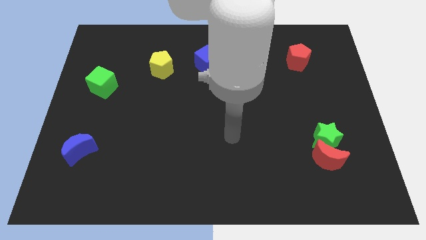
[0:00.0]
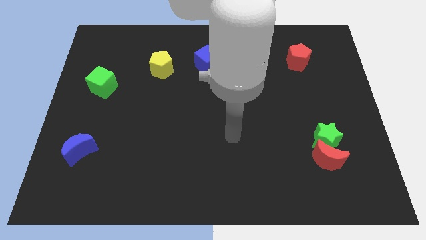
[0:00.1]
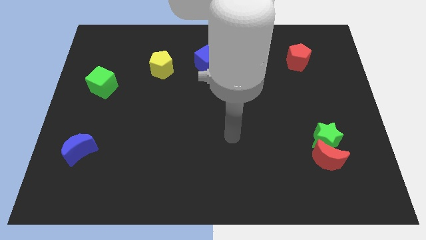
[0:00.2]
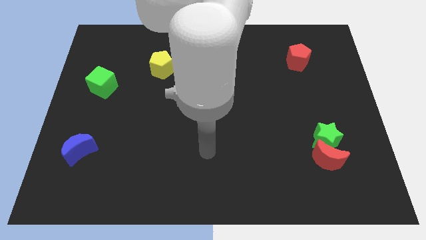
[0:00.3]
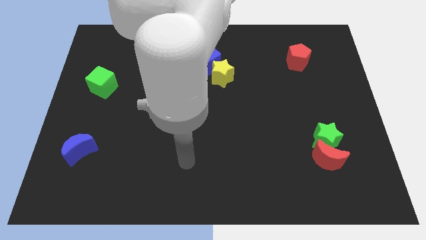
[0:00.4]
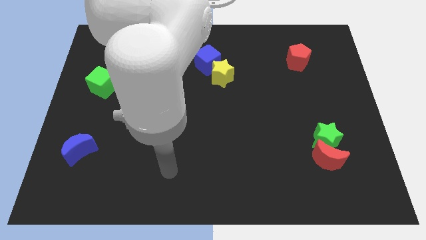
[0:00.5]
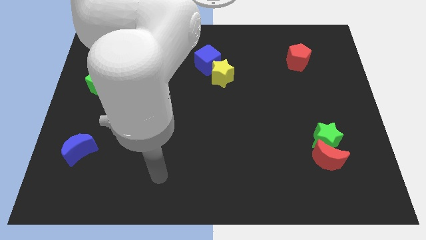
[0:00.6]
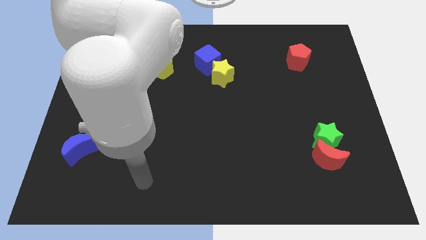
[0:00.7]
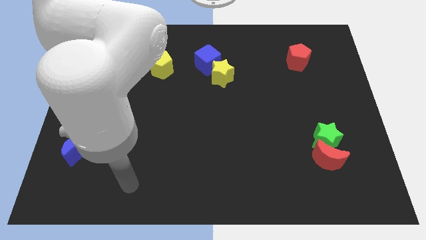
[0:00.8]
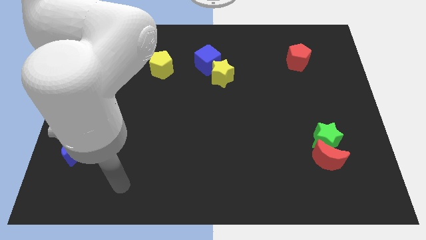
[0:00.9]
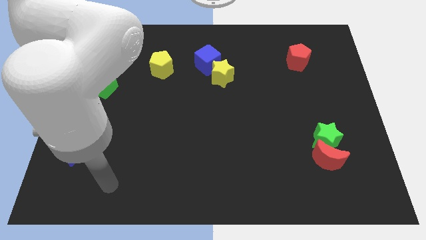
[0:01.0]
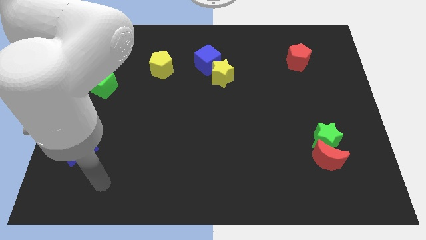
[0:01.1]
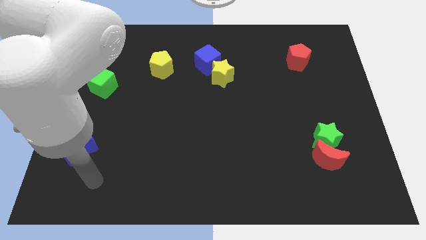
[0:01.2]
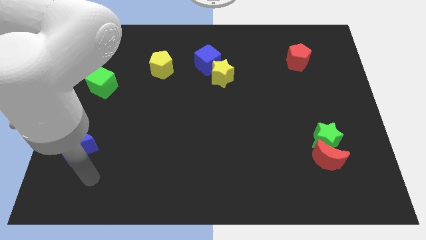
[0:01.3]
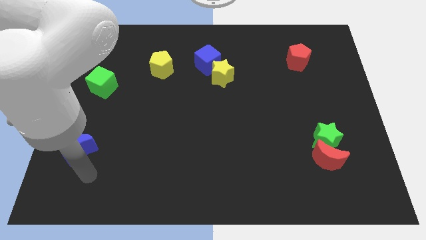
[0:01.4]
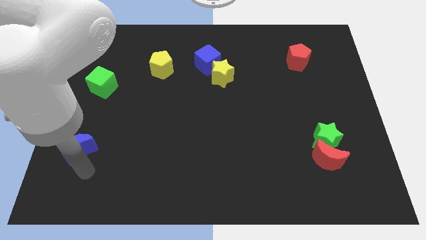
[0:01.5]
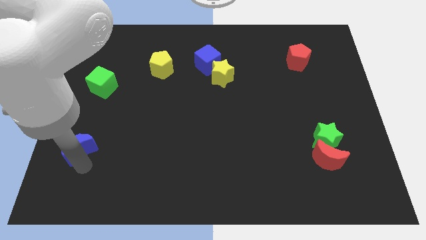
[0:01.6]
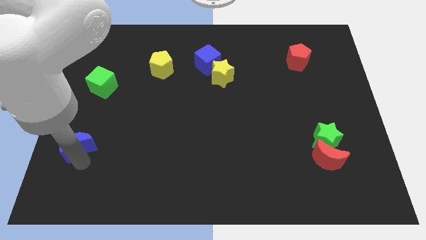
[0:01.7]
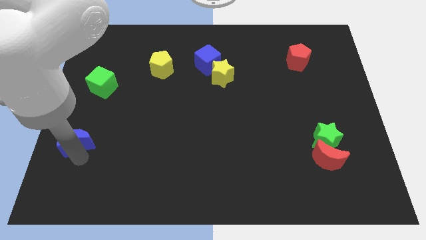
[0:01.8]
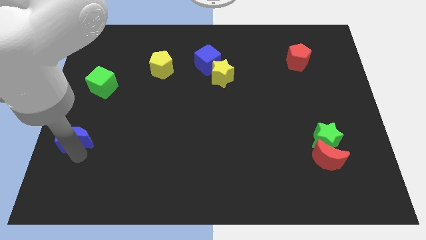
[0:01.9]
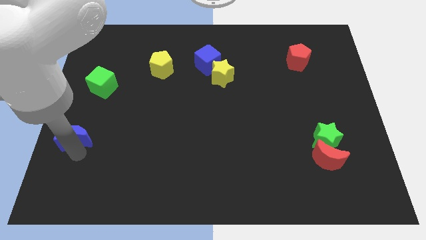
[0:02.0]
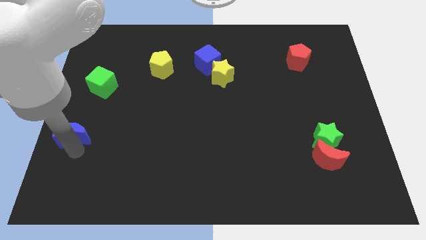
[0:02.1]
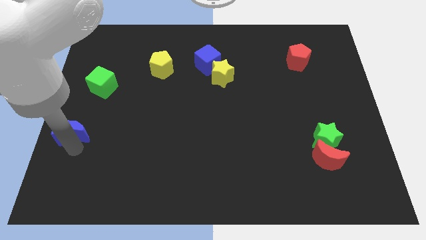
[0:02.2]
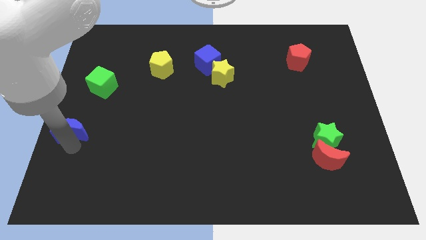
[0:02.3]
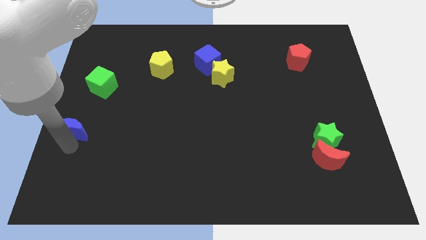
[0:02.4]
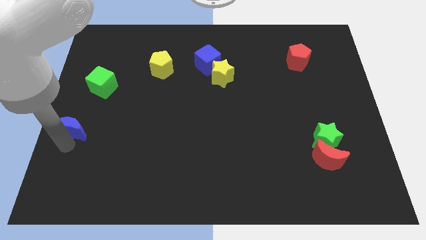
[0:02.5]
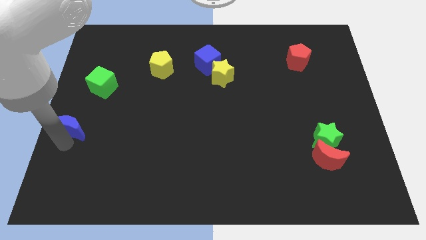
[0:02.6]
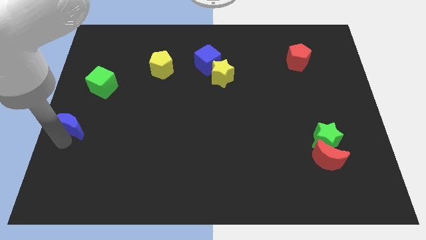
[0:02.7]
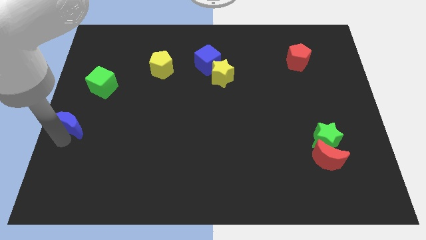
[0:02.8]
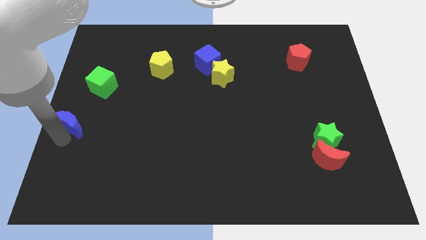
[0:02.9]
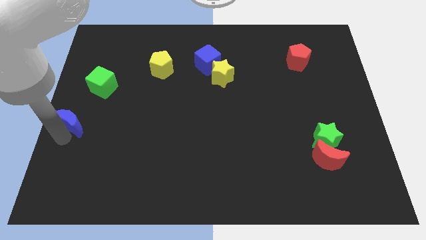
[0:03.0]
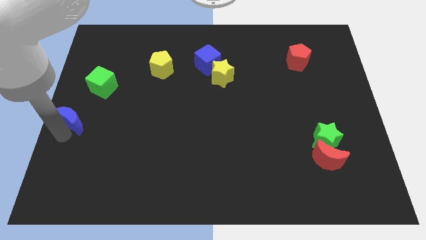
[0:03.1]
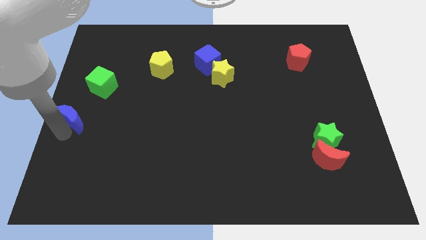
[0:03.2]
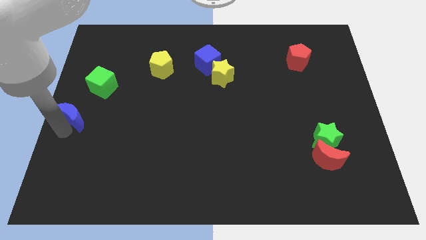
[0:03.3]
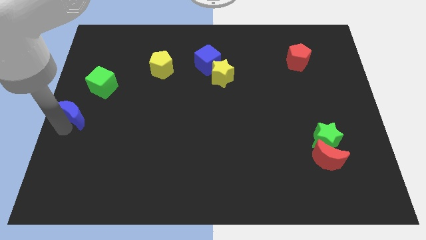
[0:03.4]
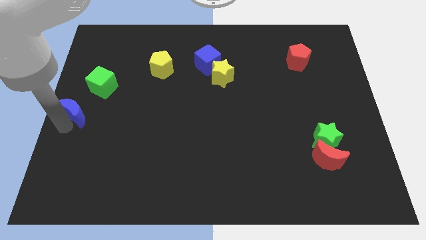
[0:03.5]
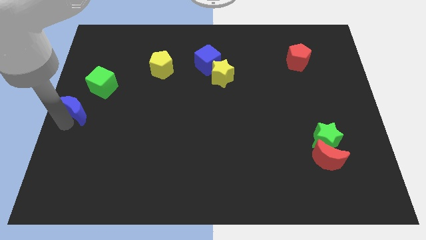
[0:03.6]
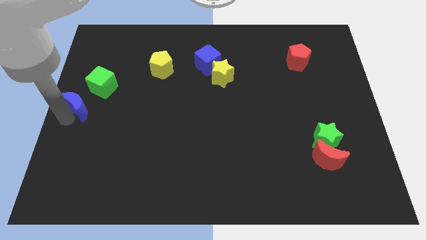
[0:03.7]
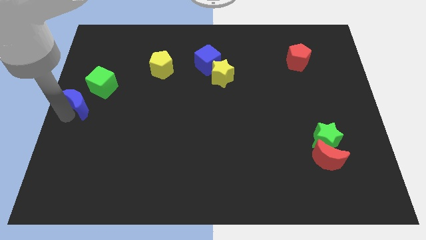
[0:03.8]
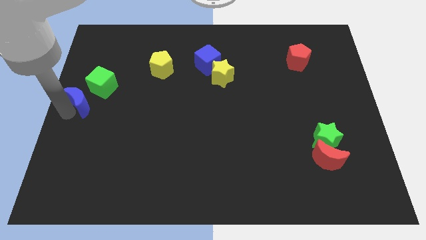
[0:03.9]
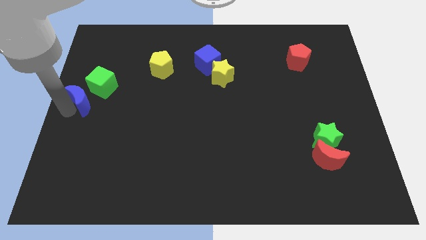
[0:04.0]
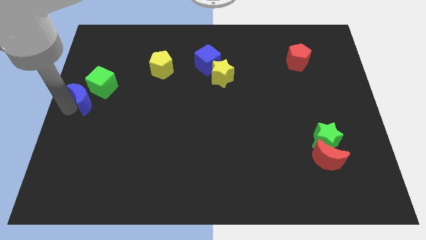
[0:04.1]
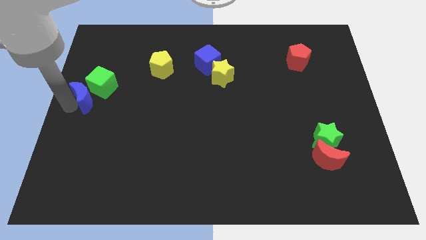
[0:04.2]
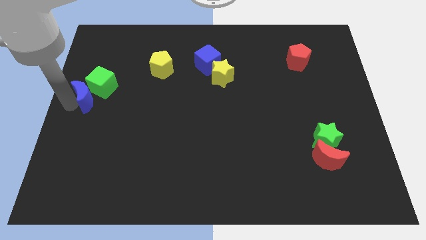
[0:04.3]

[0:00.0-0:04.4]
move the blue moon close to the green cube

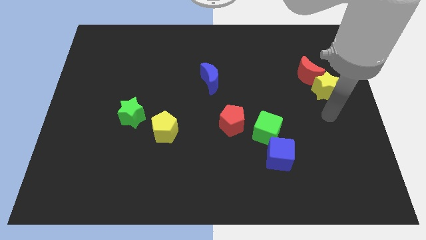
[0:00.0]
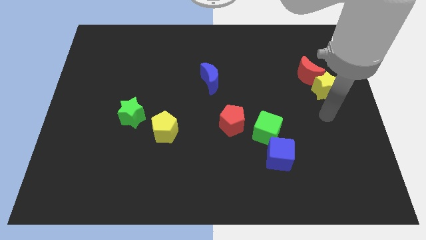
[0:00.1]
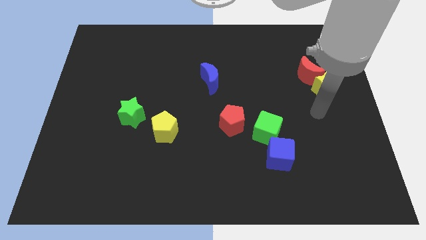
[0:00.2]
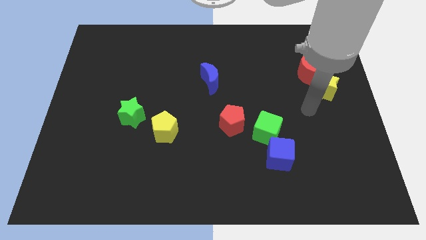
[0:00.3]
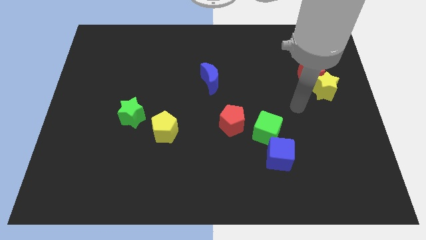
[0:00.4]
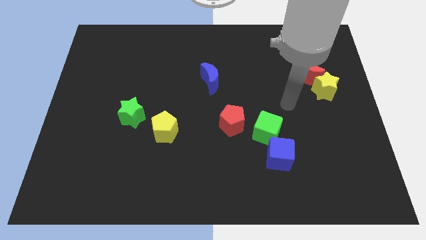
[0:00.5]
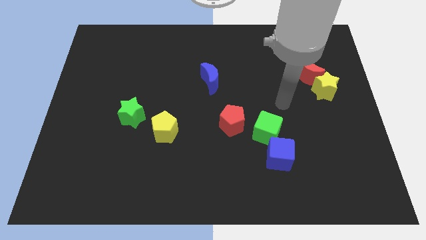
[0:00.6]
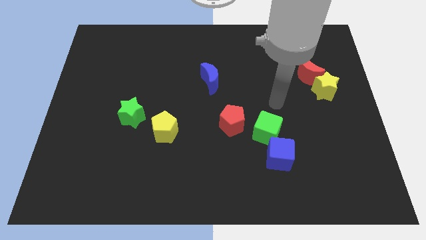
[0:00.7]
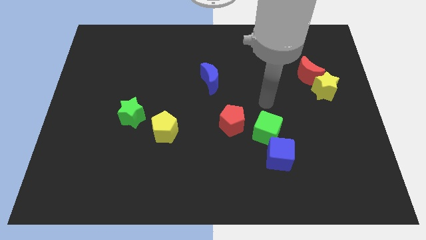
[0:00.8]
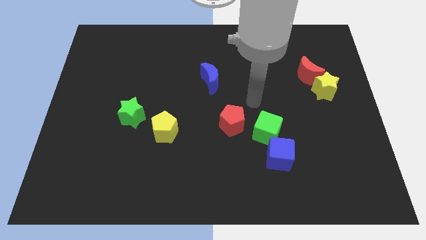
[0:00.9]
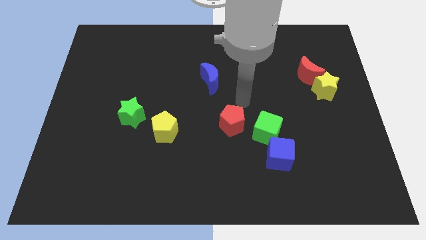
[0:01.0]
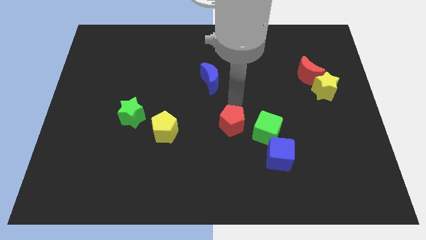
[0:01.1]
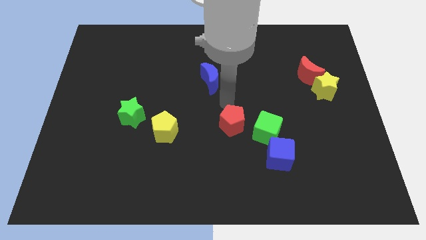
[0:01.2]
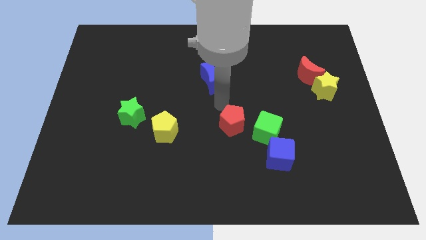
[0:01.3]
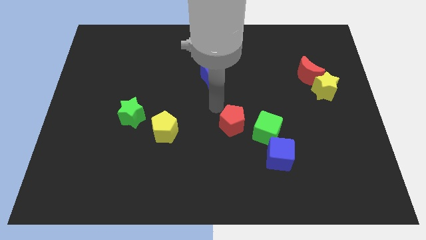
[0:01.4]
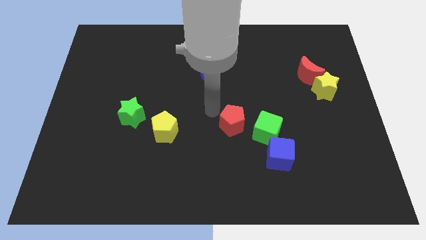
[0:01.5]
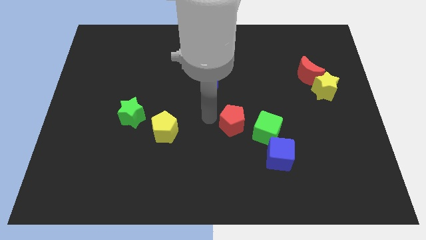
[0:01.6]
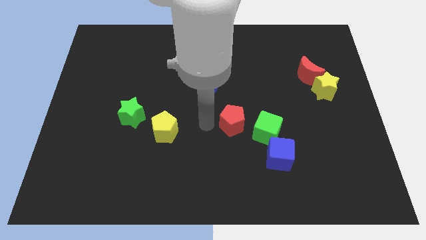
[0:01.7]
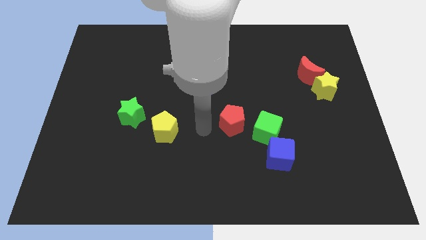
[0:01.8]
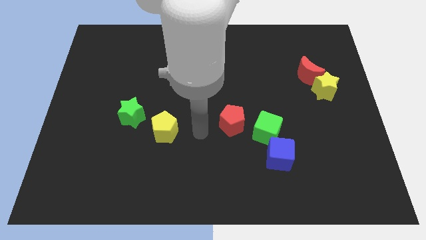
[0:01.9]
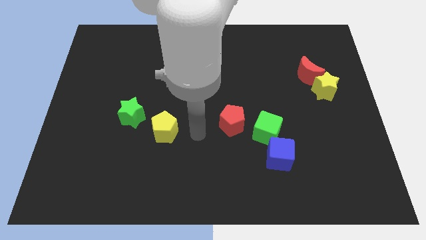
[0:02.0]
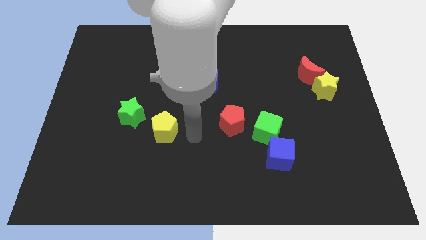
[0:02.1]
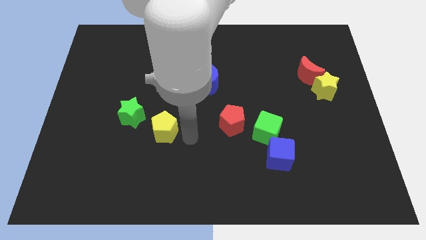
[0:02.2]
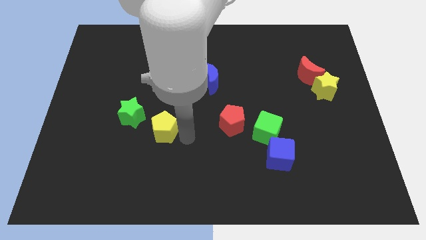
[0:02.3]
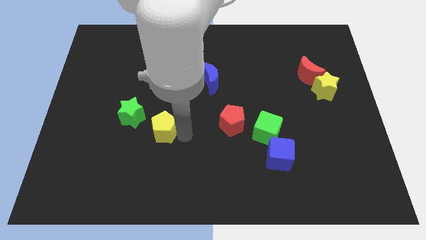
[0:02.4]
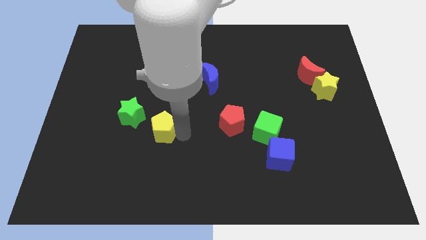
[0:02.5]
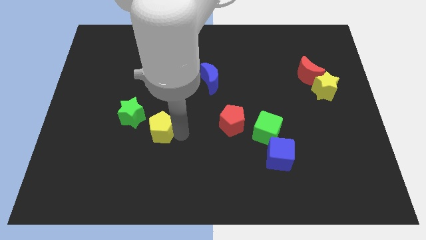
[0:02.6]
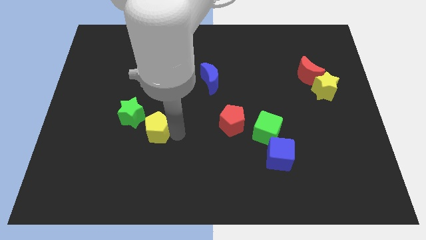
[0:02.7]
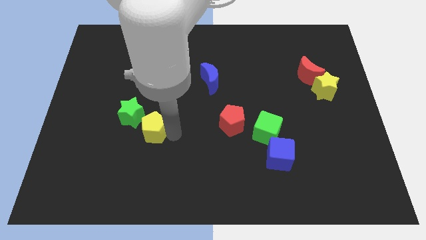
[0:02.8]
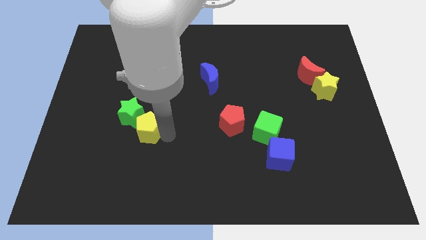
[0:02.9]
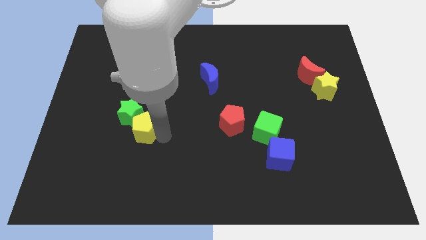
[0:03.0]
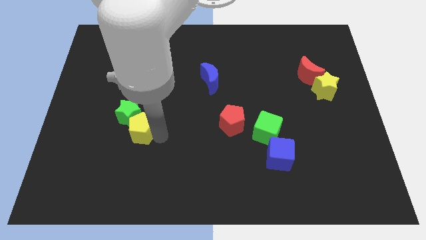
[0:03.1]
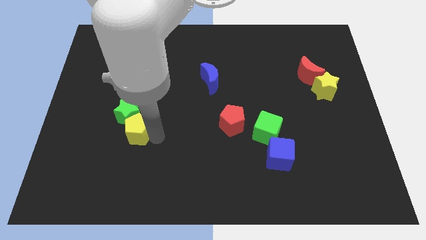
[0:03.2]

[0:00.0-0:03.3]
move the yellow pentagon towards the green star

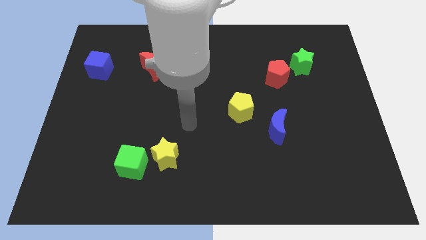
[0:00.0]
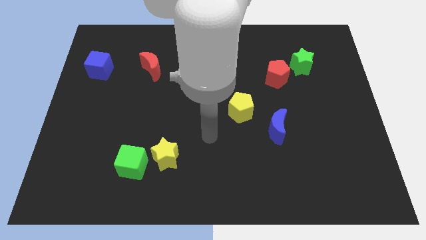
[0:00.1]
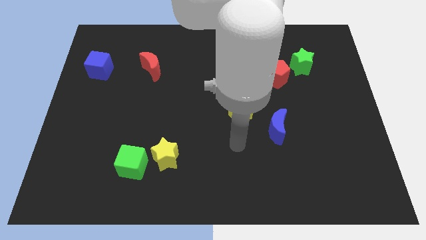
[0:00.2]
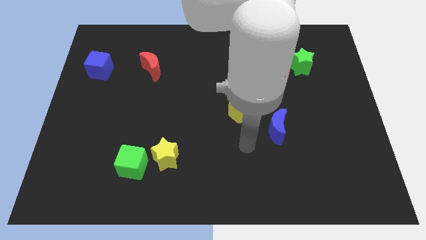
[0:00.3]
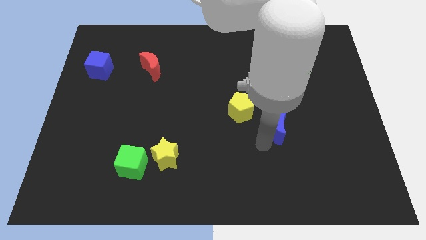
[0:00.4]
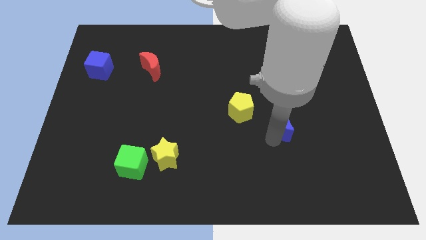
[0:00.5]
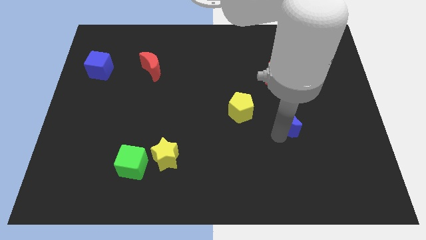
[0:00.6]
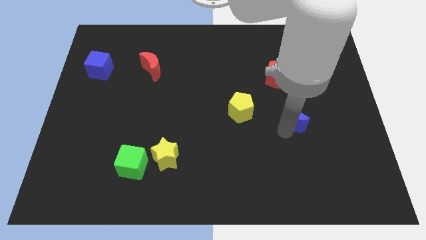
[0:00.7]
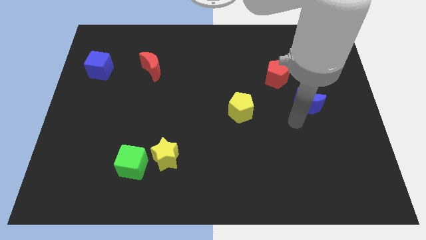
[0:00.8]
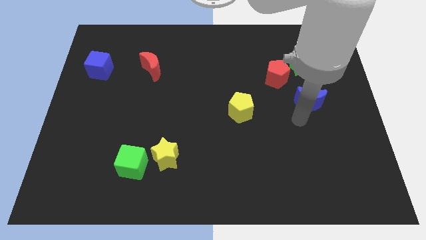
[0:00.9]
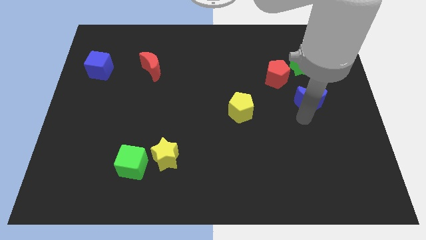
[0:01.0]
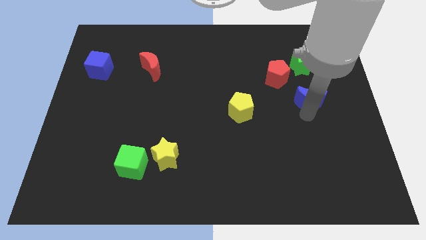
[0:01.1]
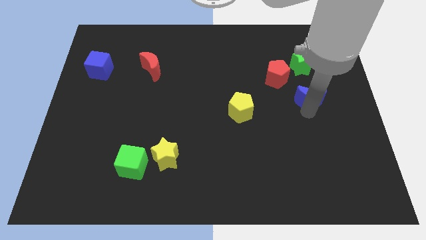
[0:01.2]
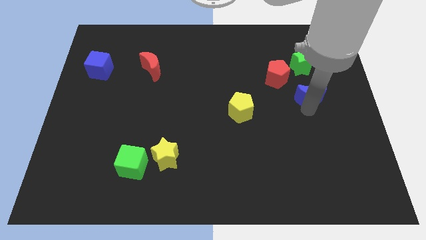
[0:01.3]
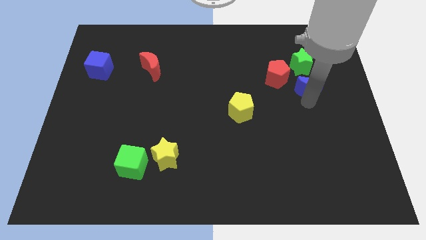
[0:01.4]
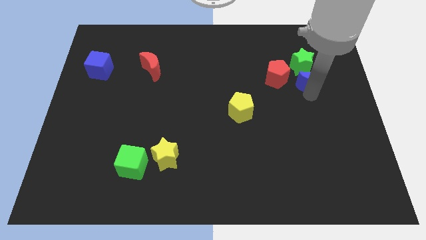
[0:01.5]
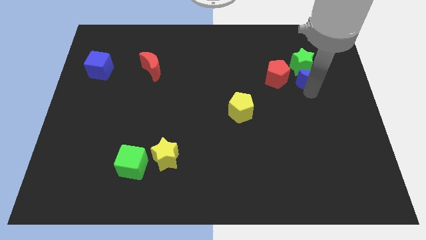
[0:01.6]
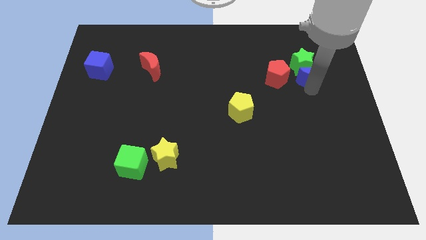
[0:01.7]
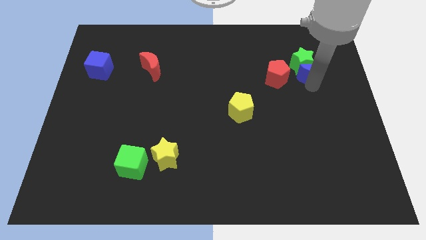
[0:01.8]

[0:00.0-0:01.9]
put the blue moon to the green star
